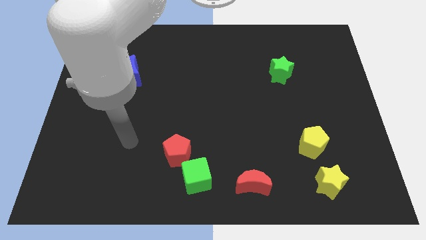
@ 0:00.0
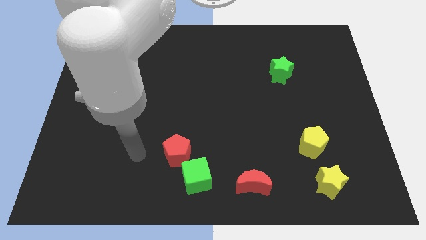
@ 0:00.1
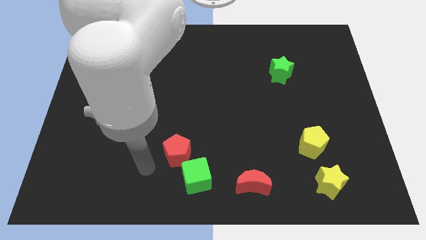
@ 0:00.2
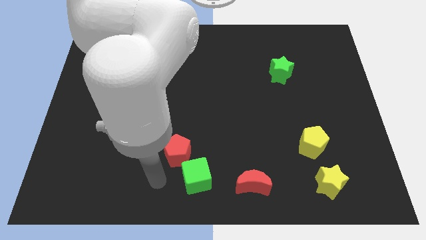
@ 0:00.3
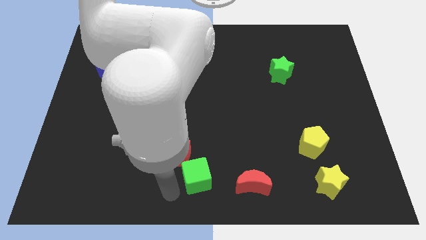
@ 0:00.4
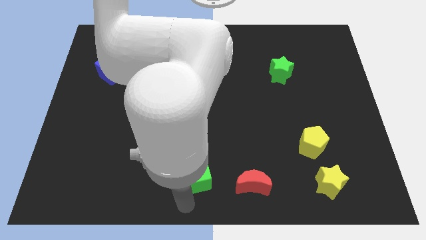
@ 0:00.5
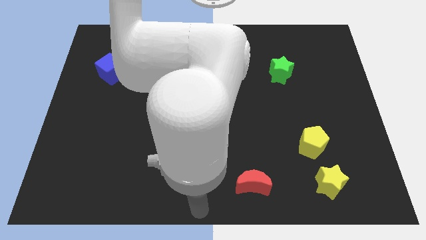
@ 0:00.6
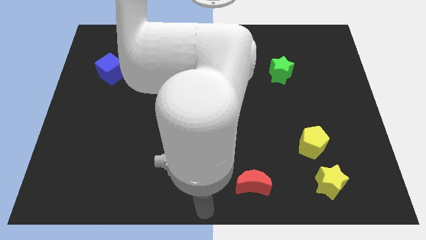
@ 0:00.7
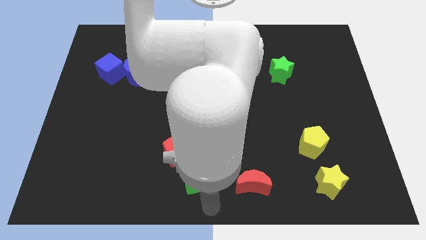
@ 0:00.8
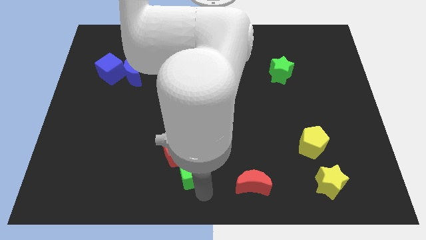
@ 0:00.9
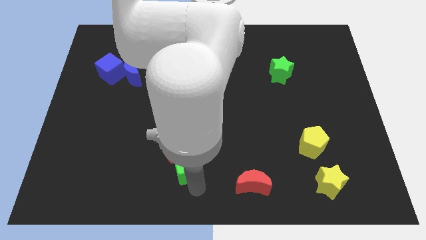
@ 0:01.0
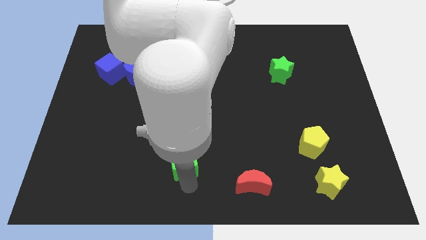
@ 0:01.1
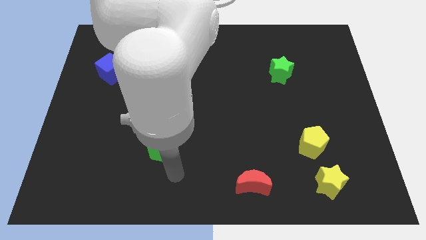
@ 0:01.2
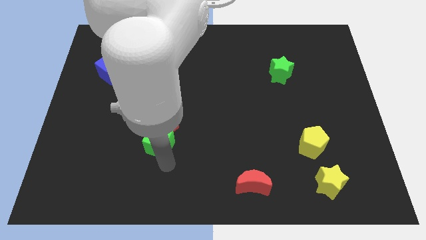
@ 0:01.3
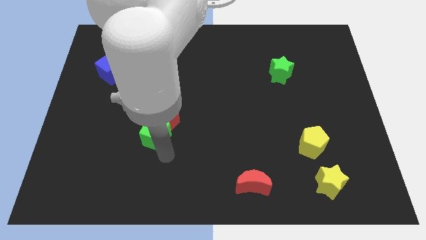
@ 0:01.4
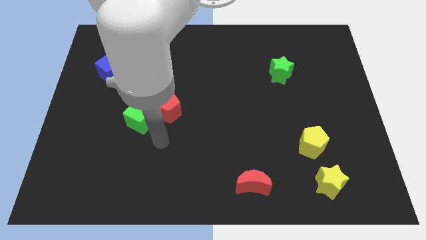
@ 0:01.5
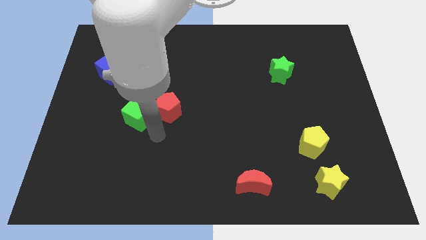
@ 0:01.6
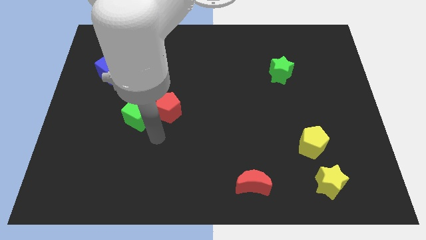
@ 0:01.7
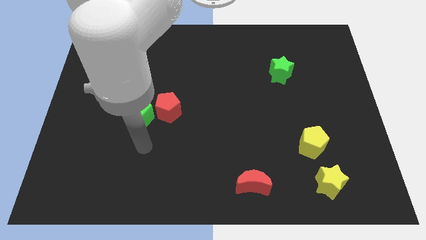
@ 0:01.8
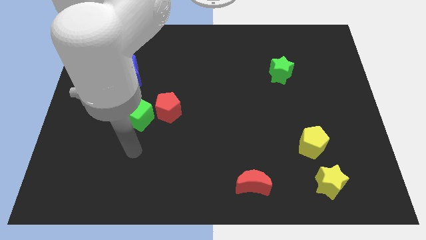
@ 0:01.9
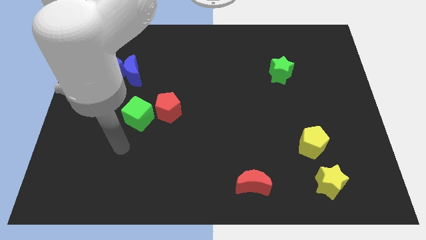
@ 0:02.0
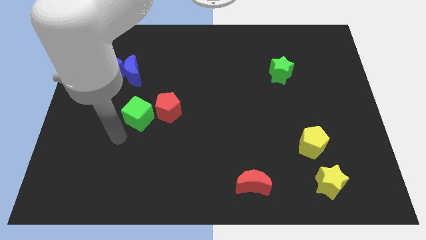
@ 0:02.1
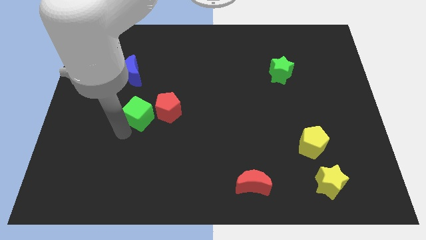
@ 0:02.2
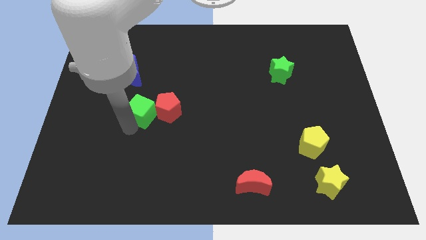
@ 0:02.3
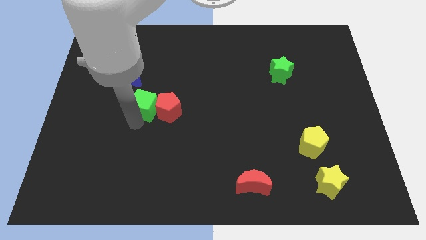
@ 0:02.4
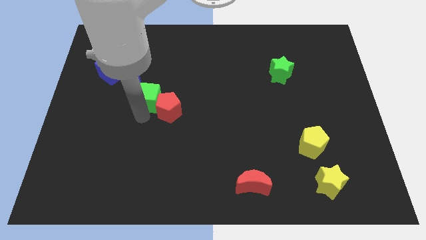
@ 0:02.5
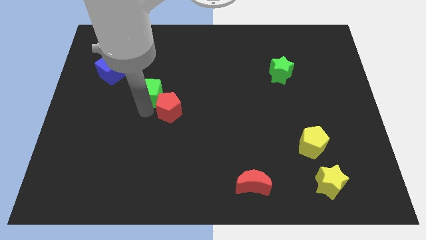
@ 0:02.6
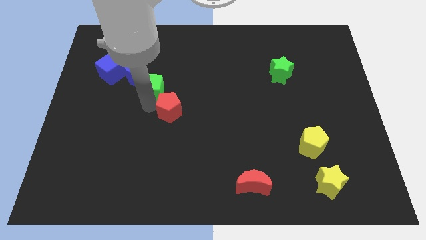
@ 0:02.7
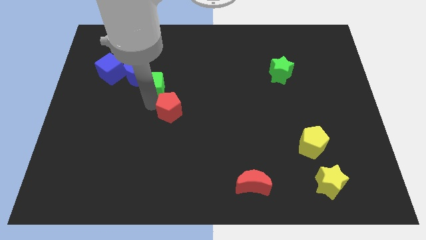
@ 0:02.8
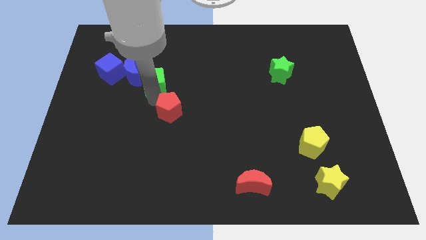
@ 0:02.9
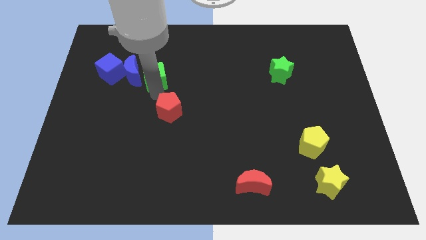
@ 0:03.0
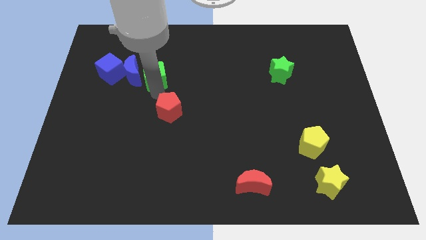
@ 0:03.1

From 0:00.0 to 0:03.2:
slide the green cube towards the right of the blue crescent

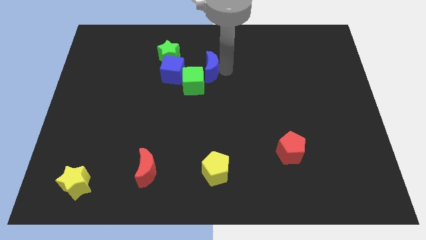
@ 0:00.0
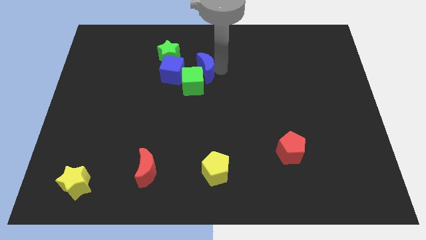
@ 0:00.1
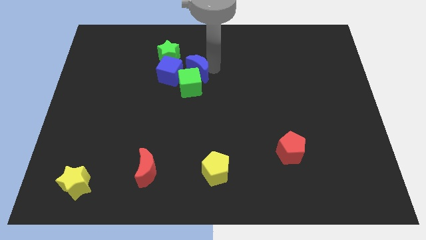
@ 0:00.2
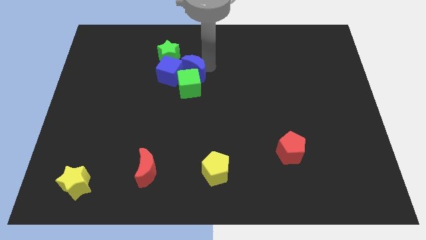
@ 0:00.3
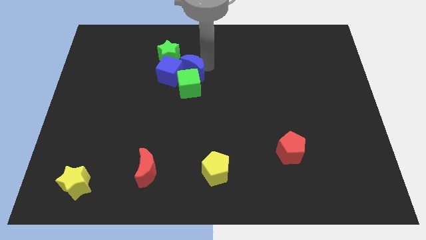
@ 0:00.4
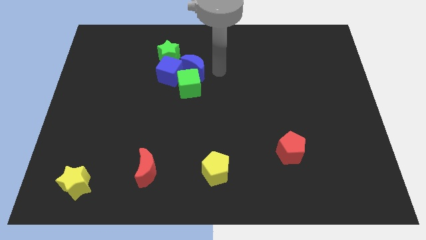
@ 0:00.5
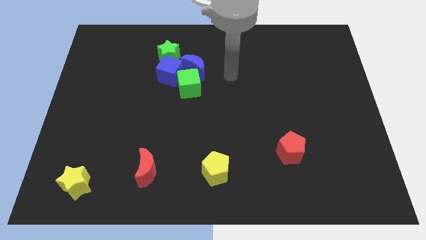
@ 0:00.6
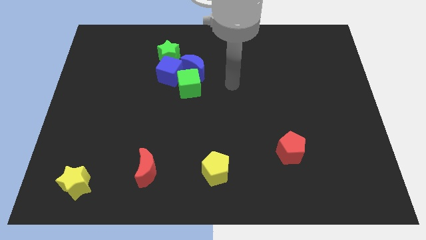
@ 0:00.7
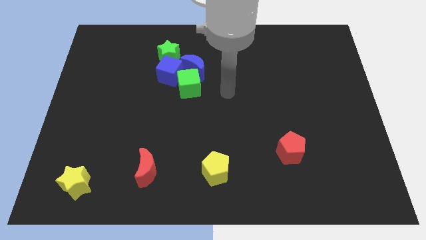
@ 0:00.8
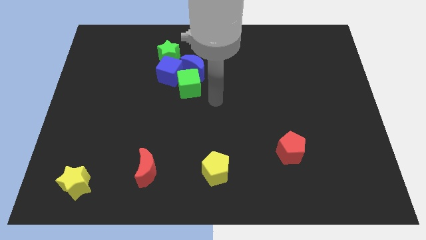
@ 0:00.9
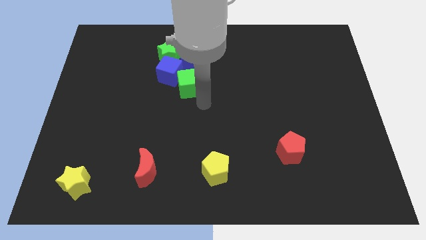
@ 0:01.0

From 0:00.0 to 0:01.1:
place the blue moon above the green cube

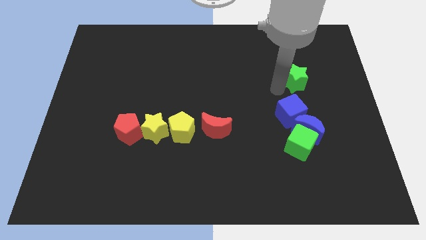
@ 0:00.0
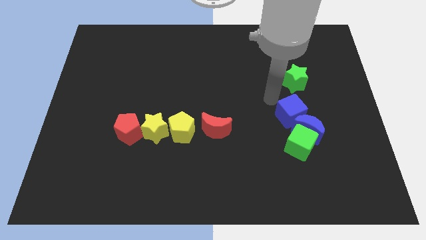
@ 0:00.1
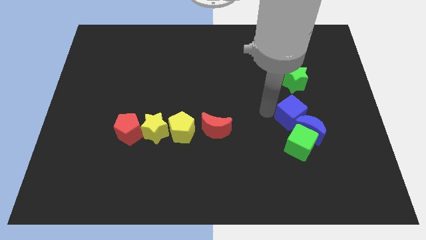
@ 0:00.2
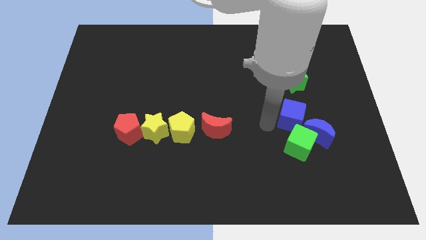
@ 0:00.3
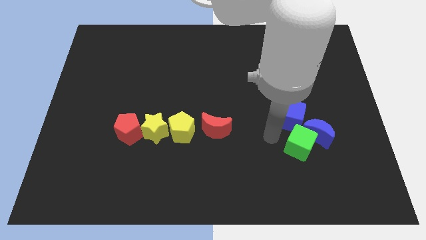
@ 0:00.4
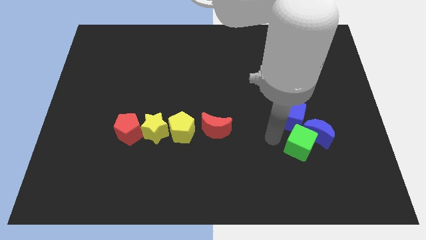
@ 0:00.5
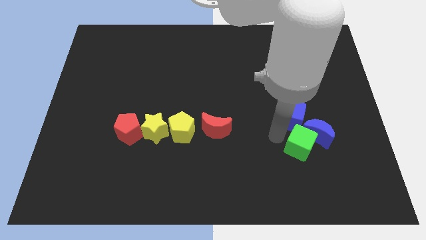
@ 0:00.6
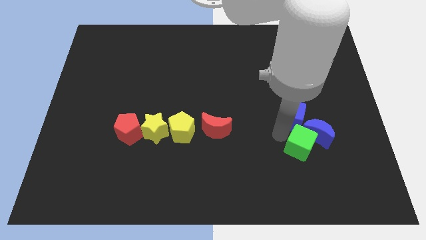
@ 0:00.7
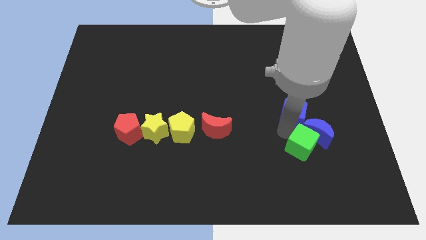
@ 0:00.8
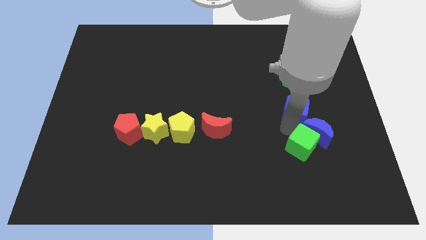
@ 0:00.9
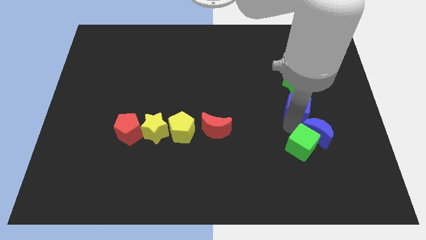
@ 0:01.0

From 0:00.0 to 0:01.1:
slide your arm on top left of green cube

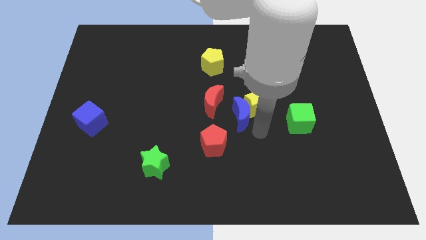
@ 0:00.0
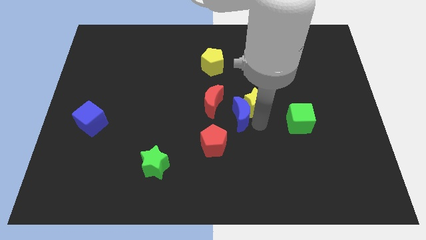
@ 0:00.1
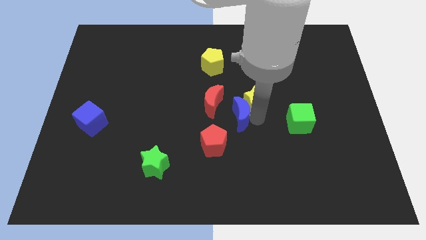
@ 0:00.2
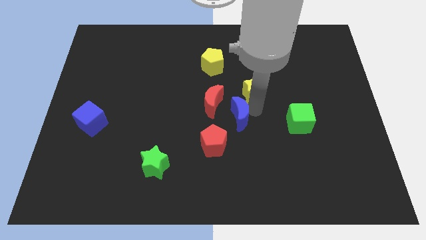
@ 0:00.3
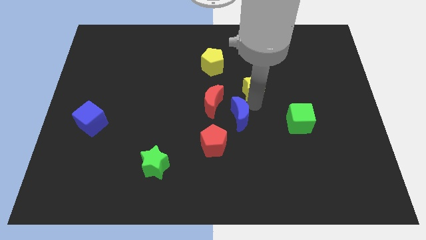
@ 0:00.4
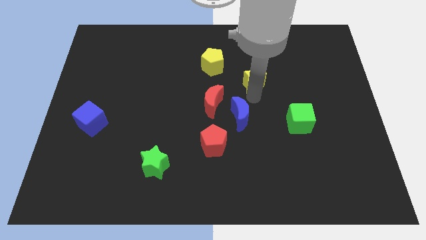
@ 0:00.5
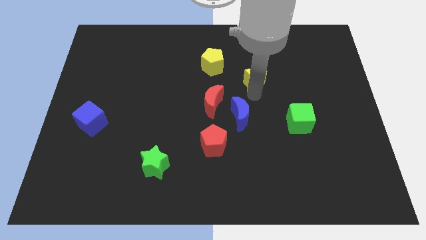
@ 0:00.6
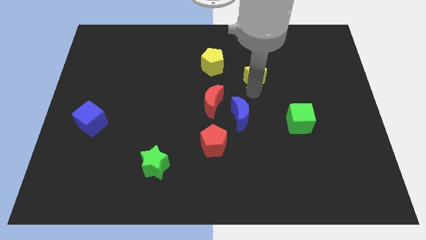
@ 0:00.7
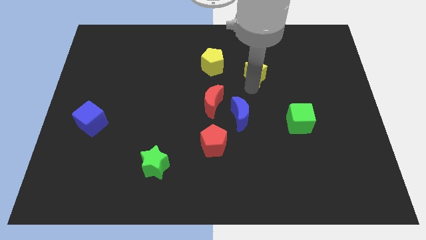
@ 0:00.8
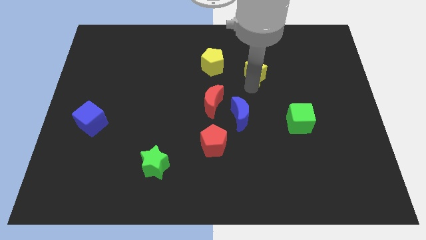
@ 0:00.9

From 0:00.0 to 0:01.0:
separate the blue moon and yellow star

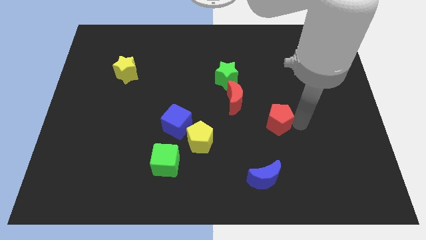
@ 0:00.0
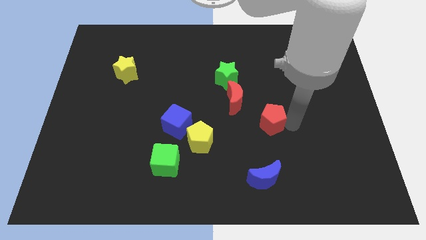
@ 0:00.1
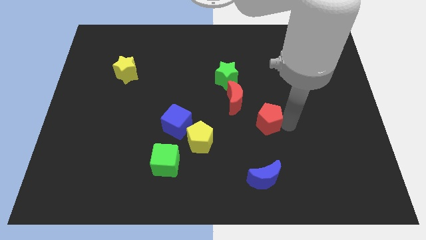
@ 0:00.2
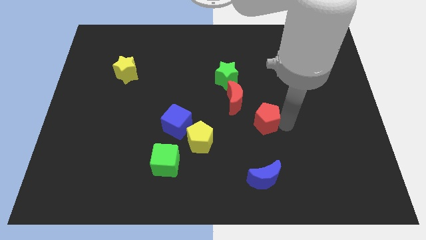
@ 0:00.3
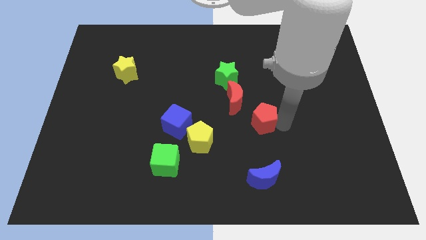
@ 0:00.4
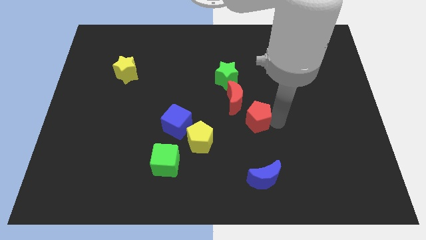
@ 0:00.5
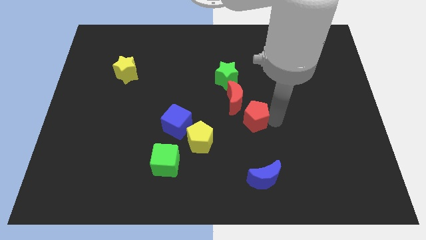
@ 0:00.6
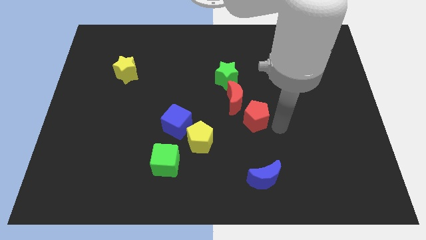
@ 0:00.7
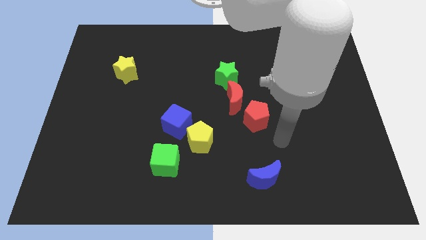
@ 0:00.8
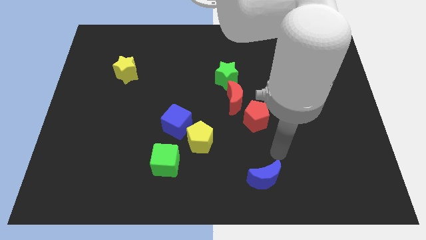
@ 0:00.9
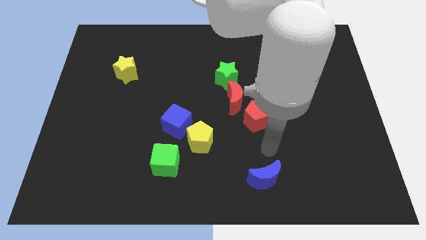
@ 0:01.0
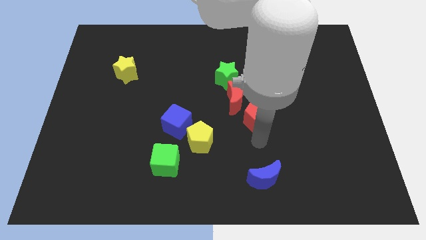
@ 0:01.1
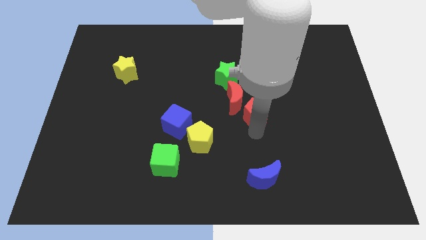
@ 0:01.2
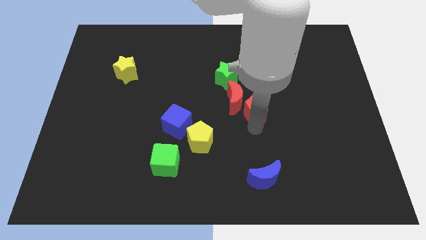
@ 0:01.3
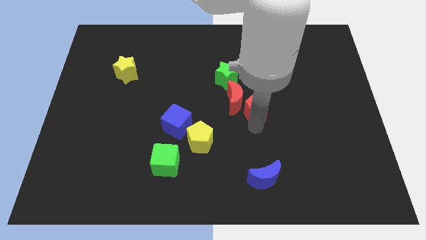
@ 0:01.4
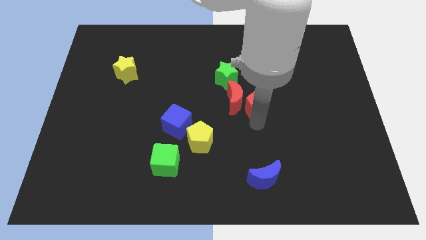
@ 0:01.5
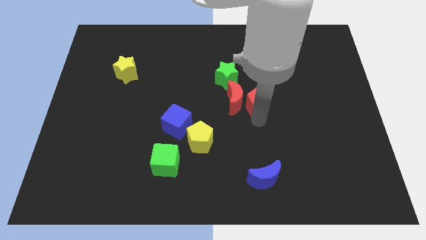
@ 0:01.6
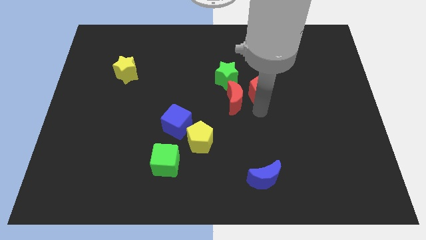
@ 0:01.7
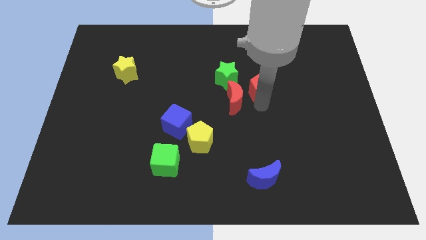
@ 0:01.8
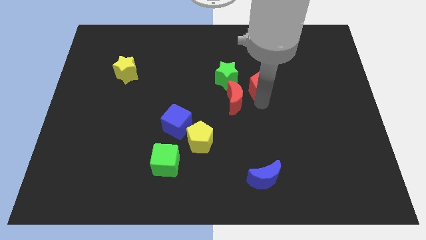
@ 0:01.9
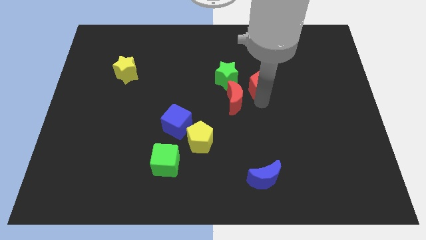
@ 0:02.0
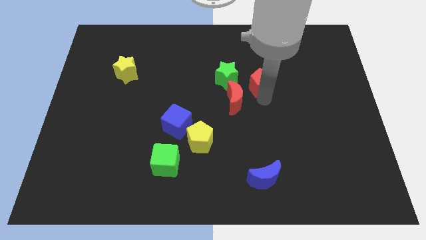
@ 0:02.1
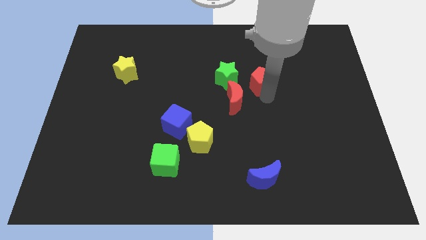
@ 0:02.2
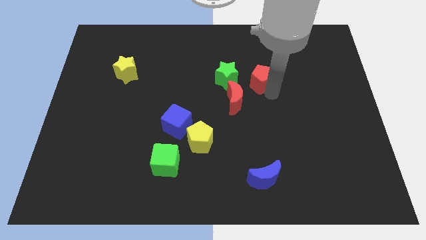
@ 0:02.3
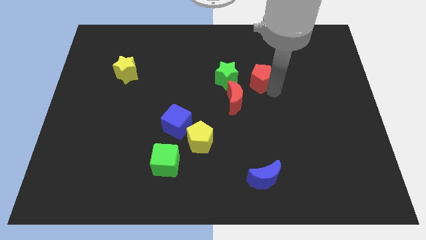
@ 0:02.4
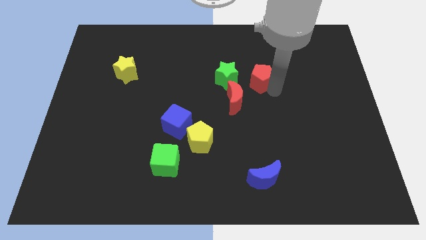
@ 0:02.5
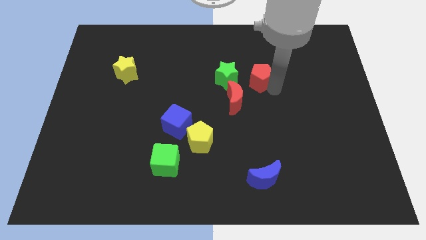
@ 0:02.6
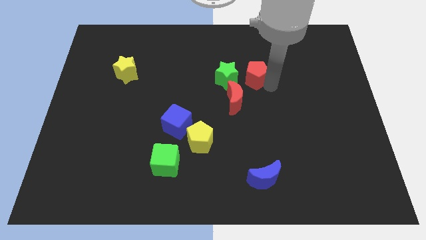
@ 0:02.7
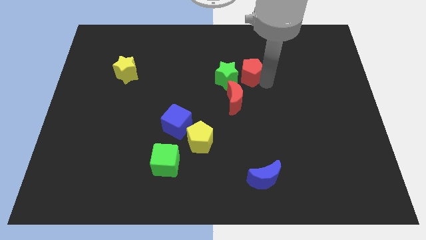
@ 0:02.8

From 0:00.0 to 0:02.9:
push red pentagon beside green star
